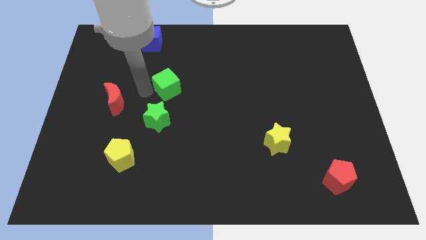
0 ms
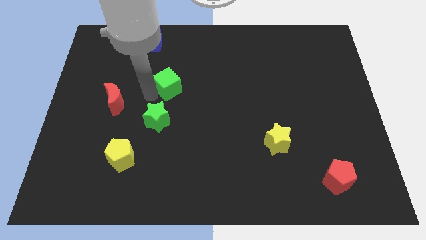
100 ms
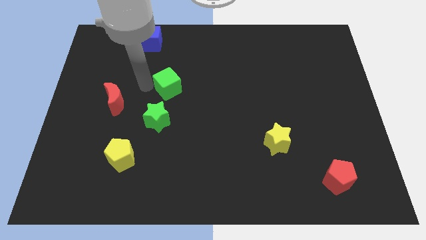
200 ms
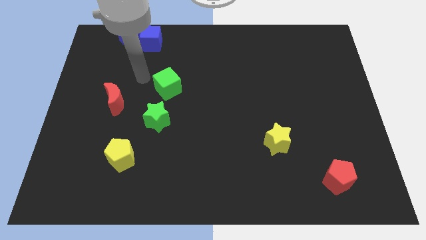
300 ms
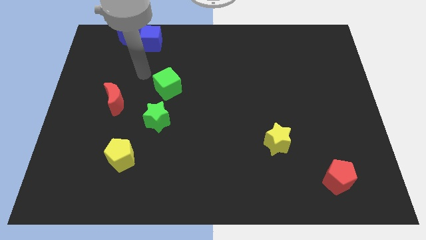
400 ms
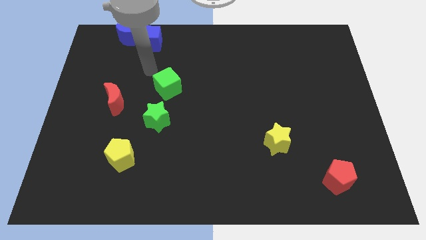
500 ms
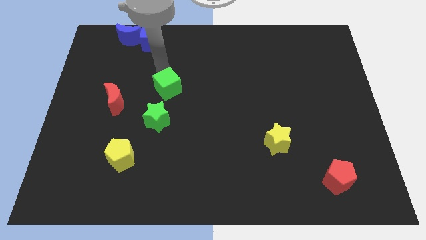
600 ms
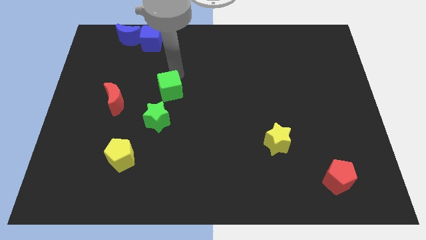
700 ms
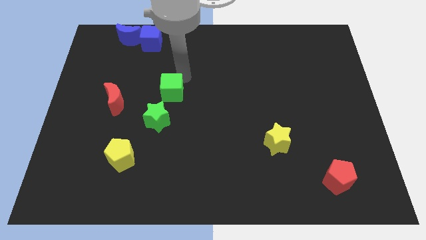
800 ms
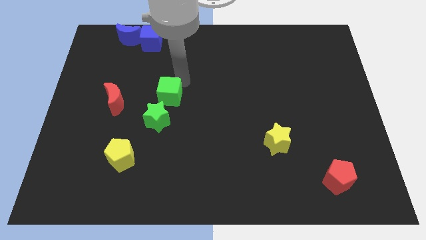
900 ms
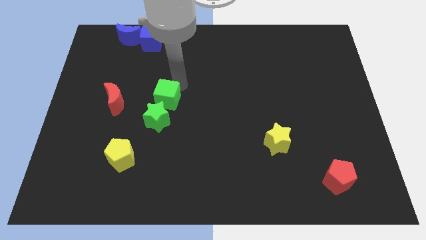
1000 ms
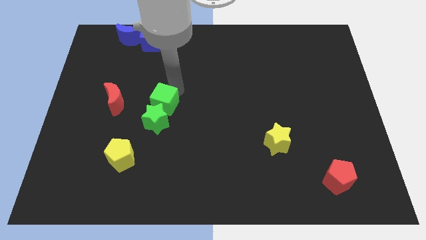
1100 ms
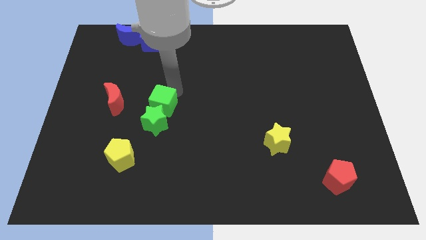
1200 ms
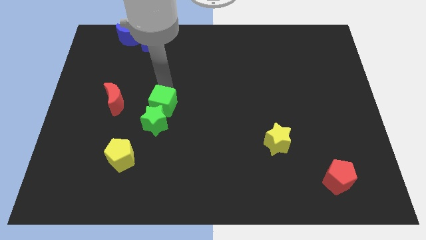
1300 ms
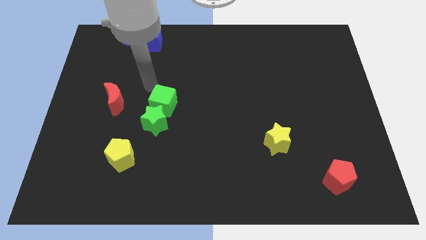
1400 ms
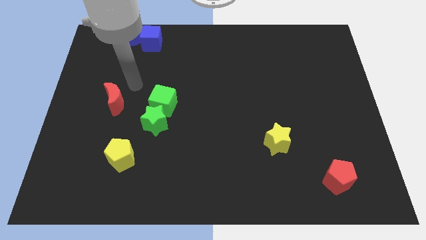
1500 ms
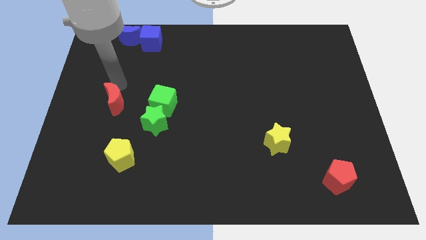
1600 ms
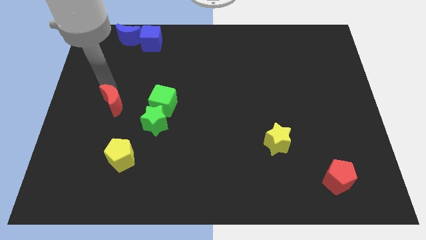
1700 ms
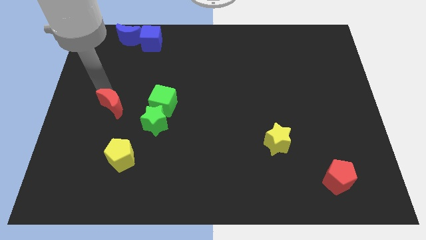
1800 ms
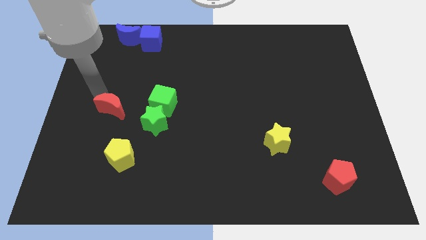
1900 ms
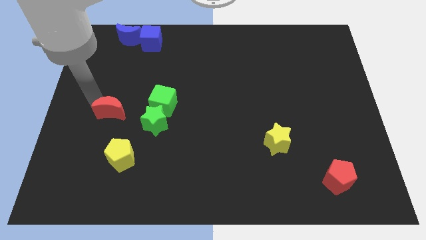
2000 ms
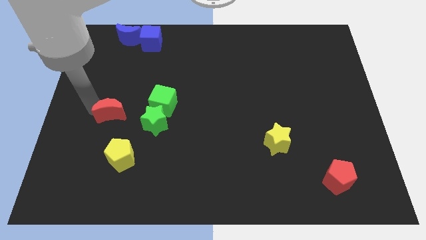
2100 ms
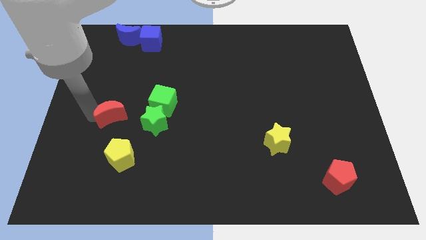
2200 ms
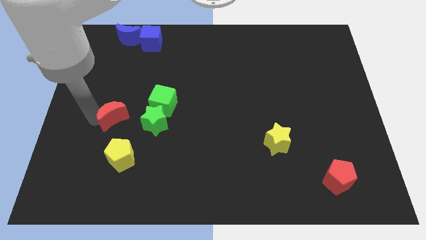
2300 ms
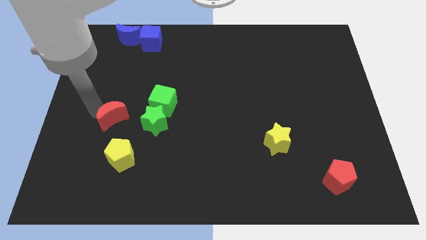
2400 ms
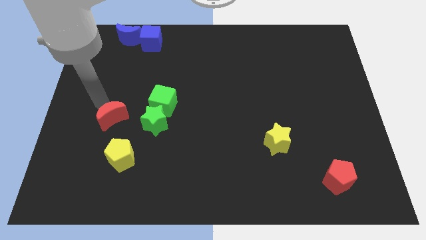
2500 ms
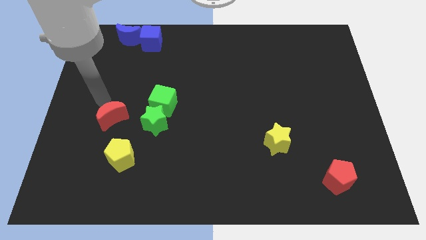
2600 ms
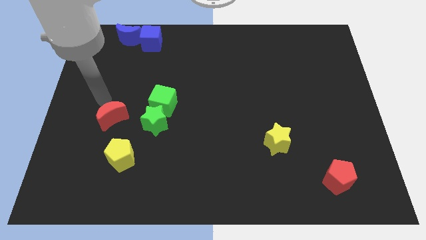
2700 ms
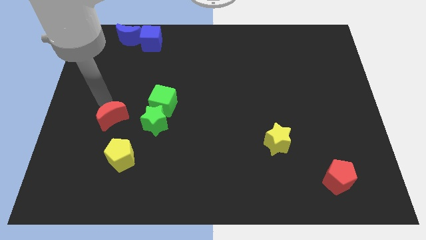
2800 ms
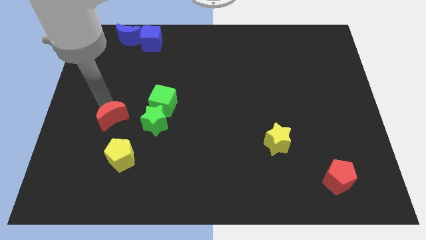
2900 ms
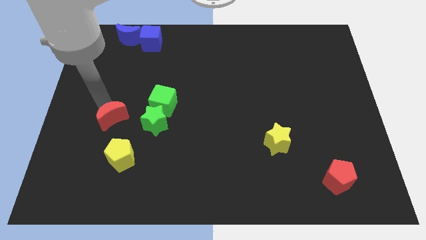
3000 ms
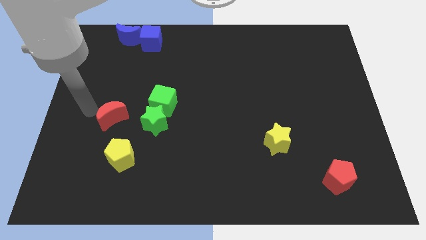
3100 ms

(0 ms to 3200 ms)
move the red moon to the left of the green star

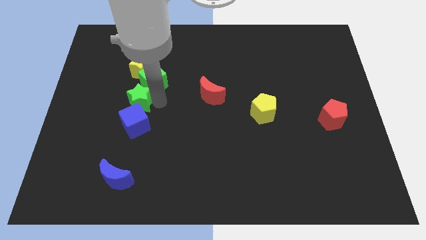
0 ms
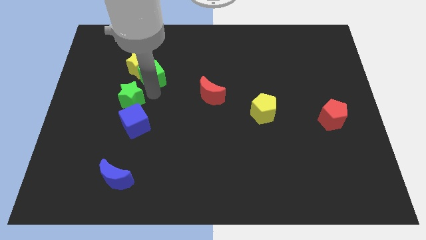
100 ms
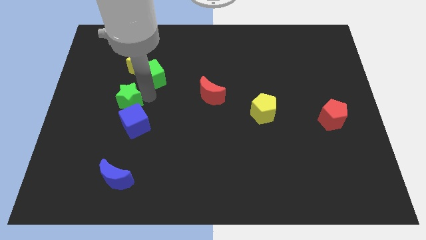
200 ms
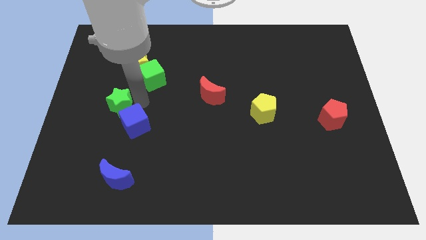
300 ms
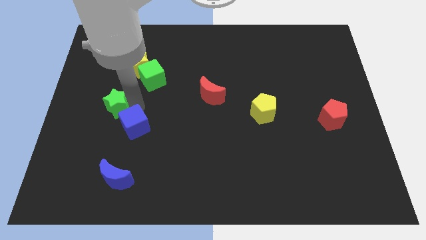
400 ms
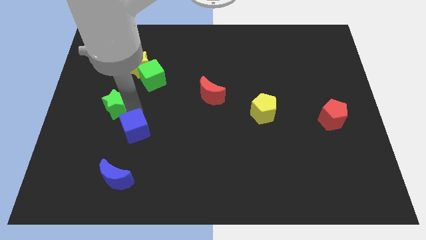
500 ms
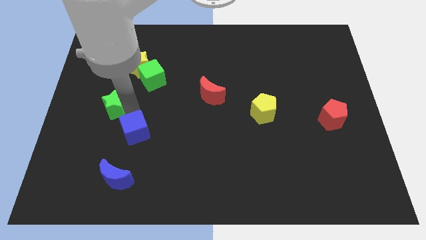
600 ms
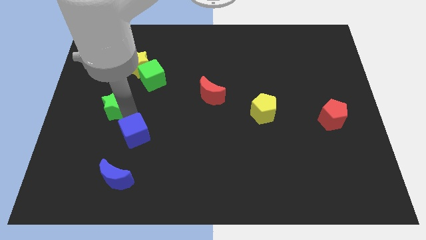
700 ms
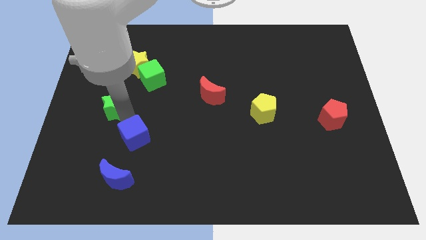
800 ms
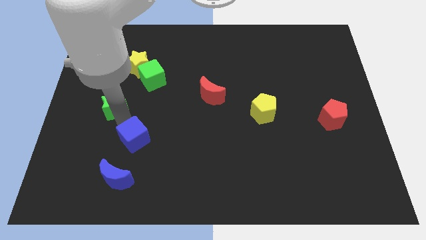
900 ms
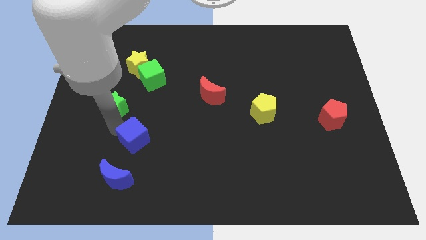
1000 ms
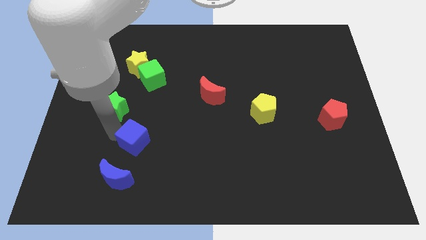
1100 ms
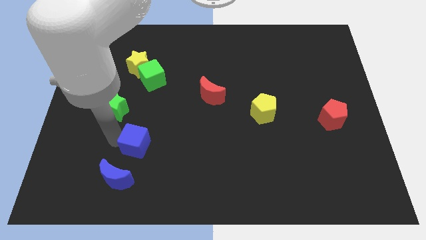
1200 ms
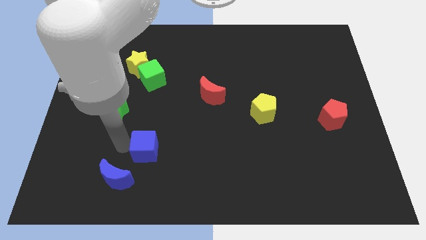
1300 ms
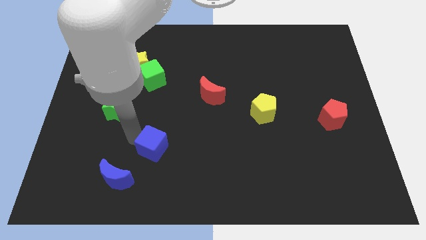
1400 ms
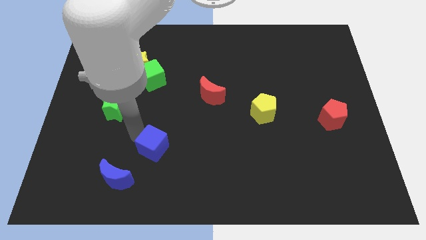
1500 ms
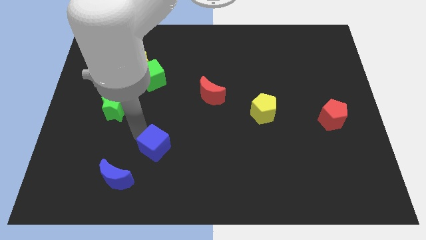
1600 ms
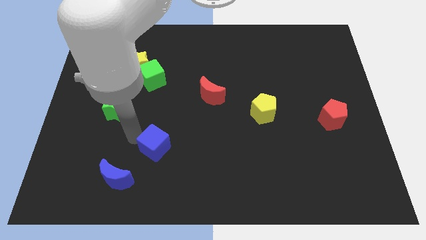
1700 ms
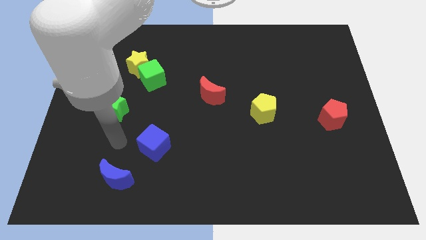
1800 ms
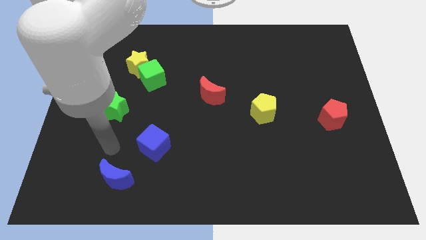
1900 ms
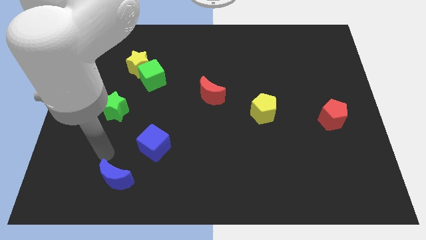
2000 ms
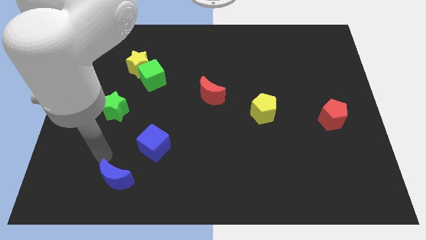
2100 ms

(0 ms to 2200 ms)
place the blue cube in between the red crescent and blue crescent

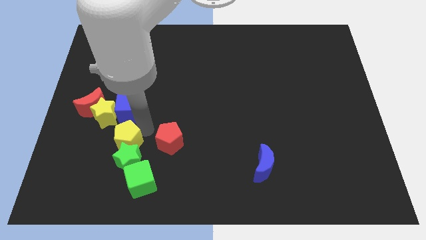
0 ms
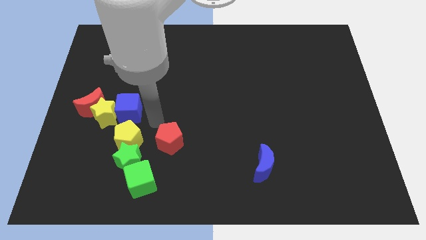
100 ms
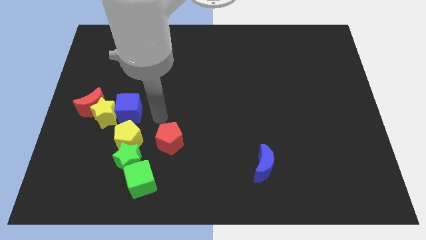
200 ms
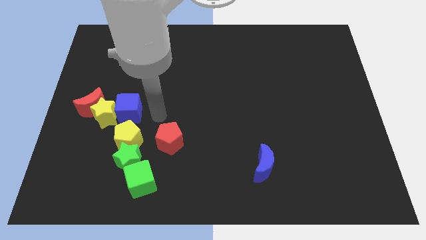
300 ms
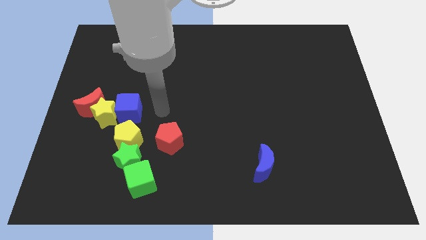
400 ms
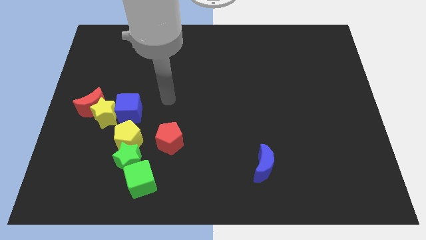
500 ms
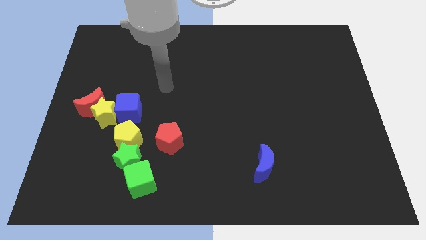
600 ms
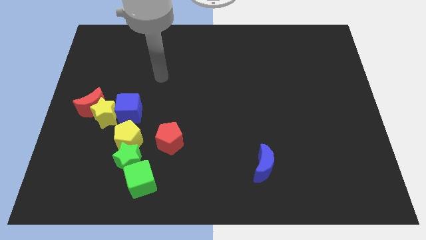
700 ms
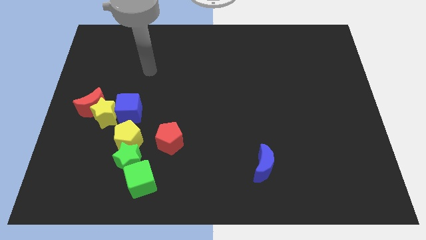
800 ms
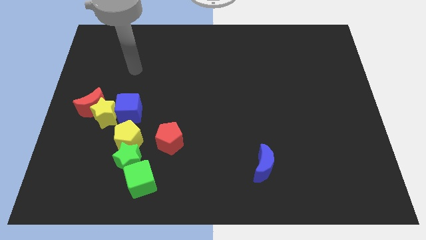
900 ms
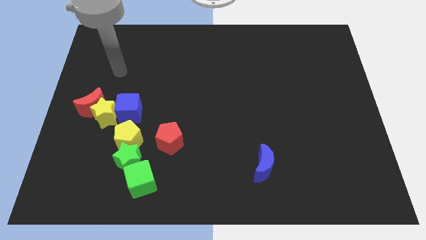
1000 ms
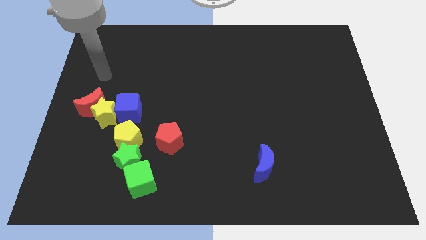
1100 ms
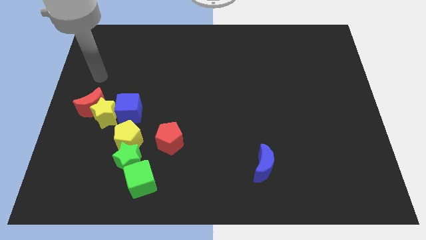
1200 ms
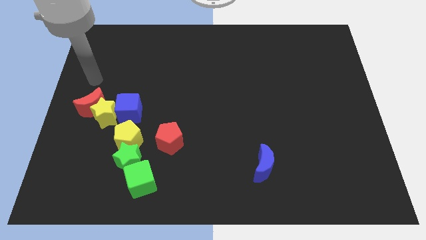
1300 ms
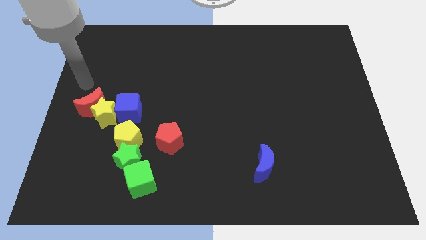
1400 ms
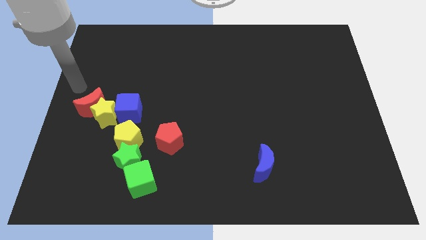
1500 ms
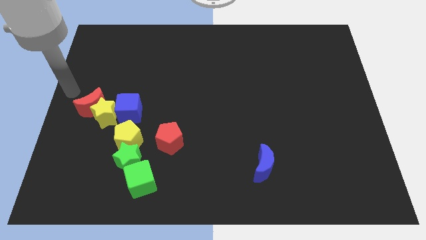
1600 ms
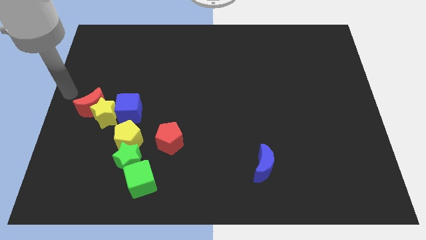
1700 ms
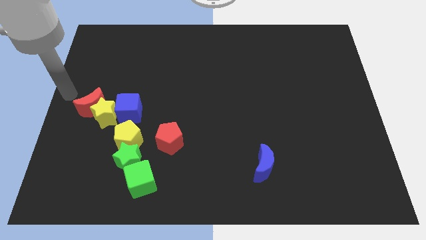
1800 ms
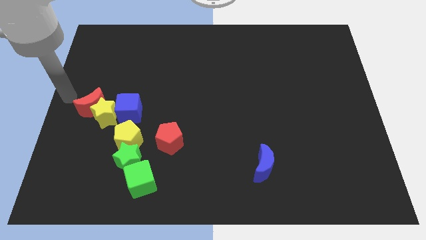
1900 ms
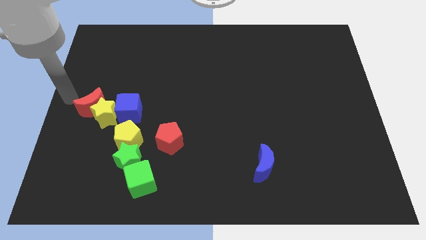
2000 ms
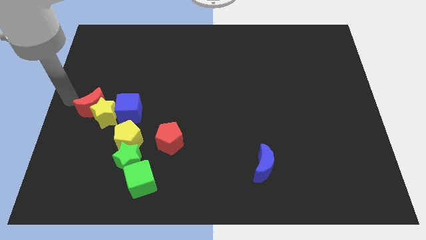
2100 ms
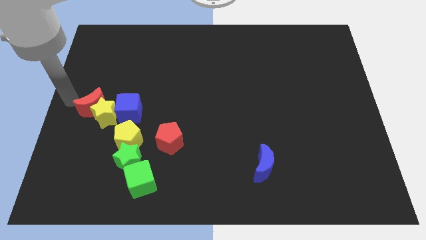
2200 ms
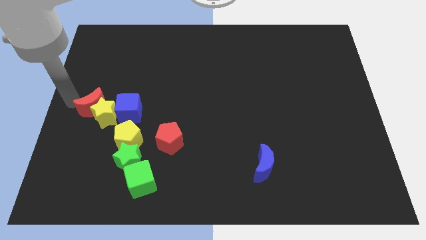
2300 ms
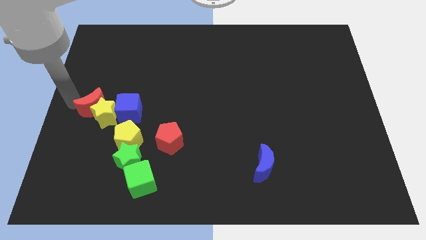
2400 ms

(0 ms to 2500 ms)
place the arm diagonally to the red moon

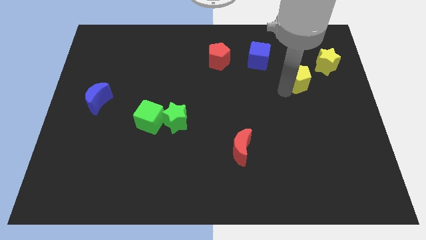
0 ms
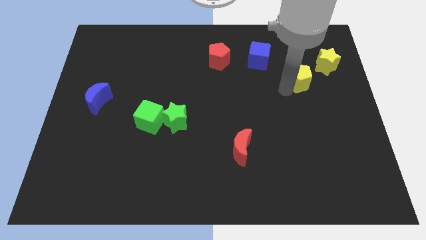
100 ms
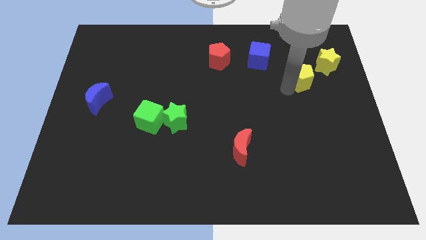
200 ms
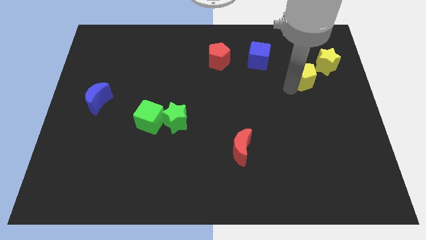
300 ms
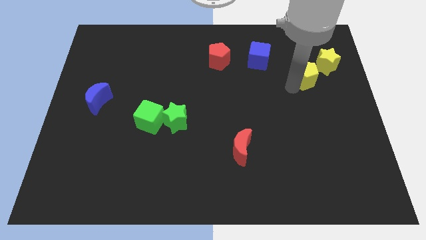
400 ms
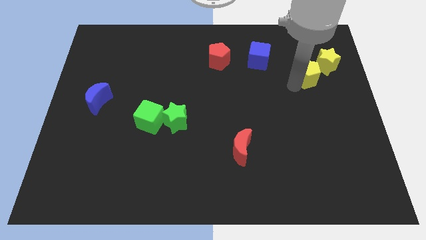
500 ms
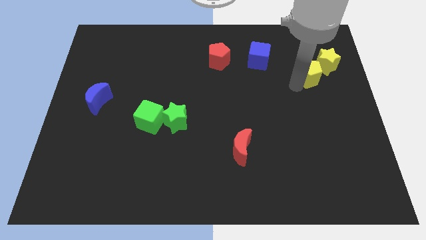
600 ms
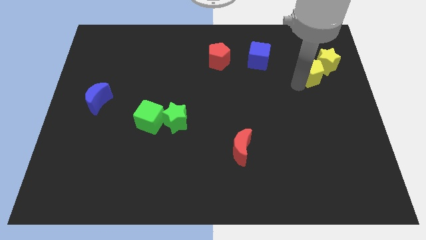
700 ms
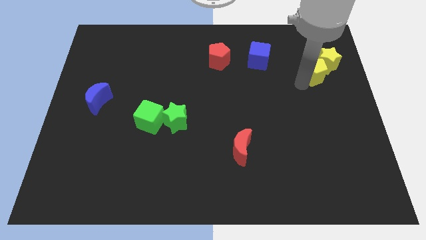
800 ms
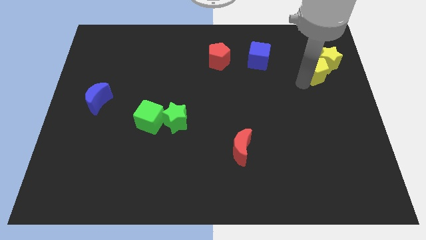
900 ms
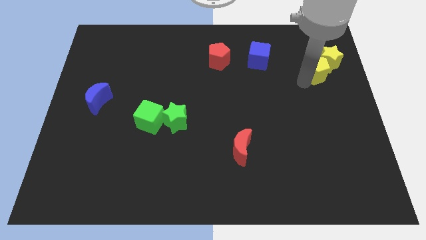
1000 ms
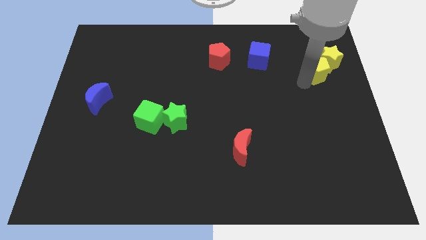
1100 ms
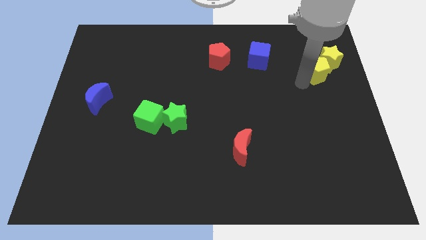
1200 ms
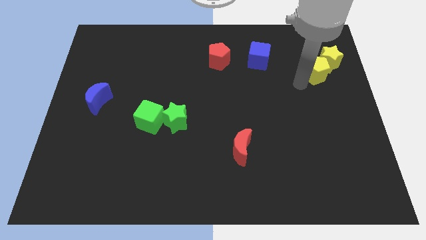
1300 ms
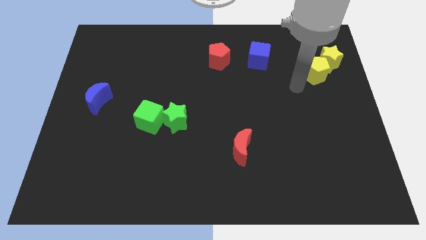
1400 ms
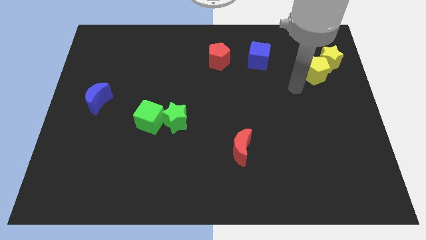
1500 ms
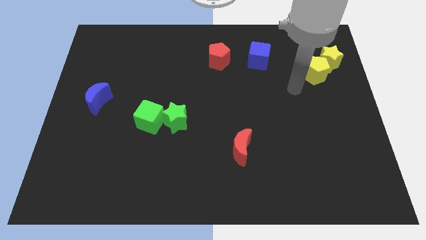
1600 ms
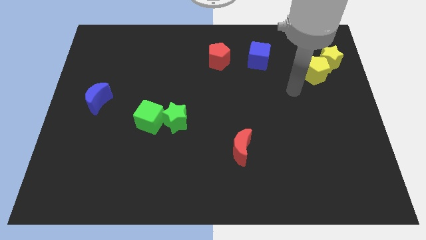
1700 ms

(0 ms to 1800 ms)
move the yellow pentagon towards the yellow star
